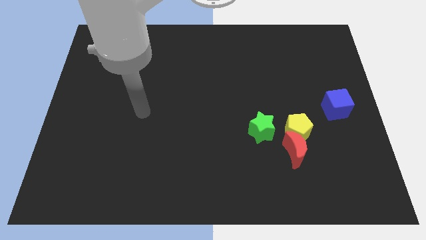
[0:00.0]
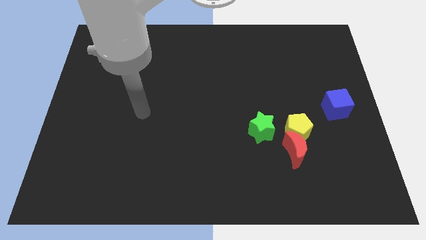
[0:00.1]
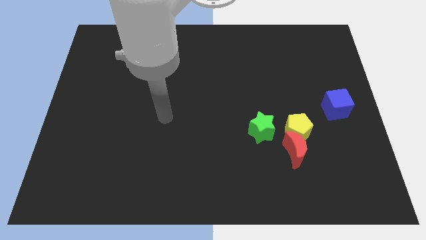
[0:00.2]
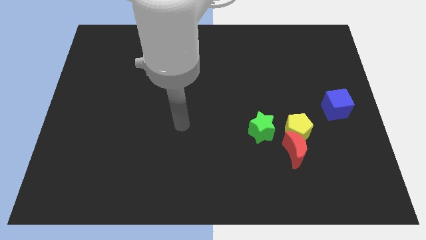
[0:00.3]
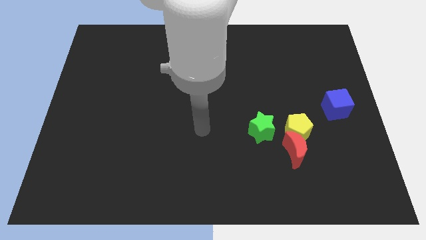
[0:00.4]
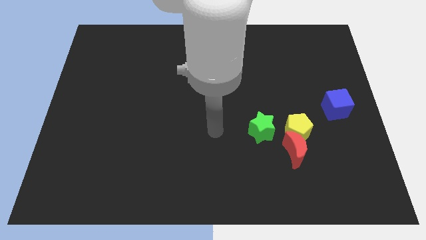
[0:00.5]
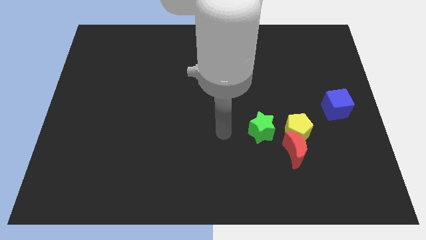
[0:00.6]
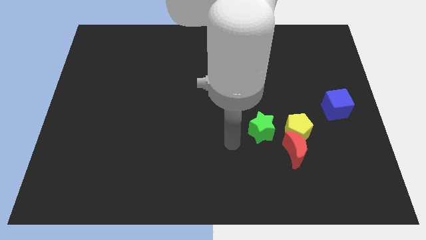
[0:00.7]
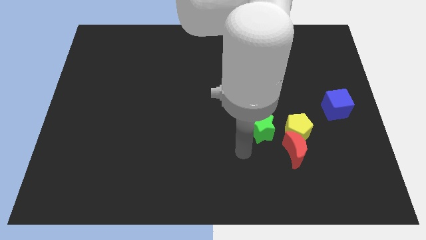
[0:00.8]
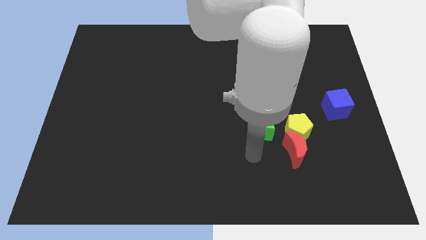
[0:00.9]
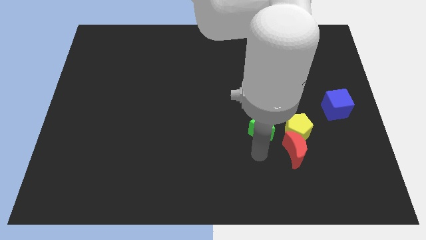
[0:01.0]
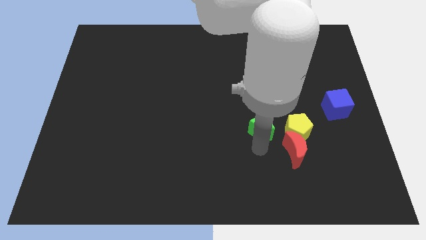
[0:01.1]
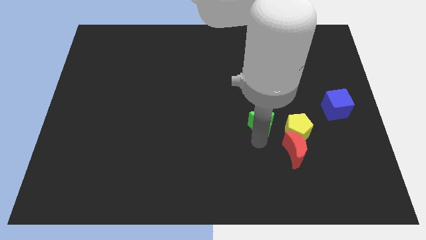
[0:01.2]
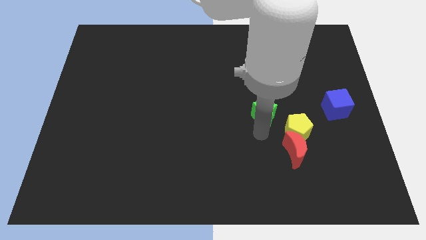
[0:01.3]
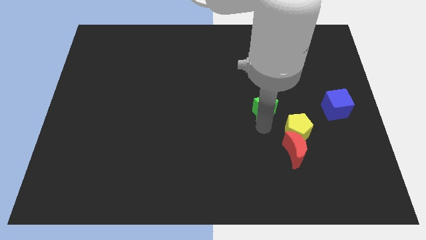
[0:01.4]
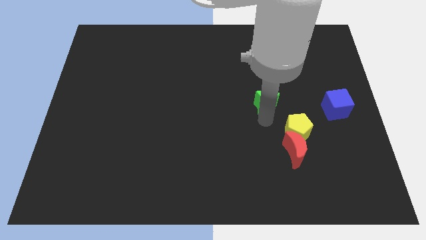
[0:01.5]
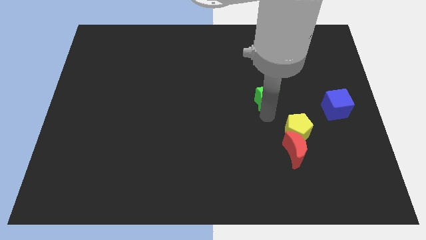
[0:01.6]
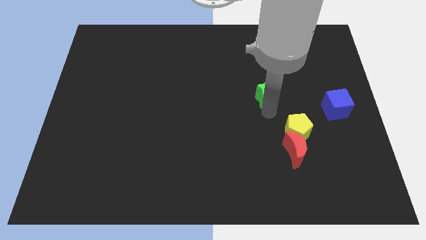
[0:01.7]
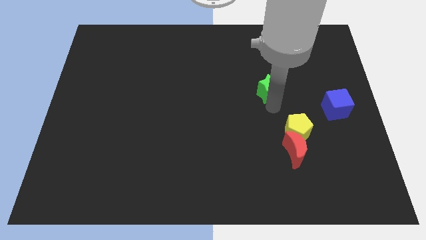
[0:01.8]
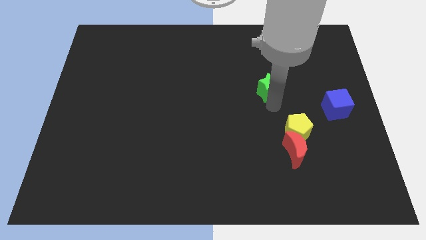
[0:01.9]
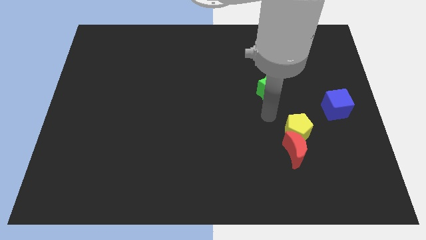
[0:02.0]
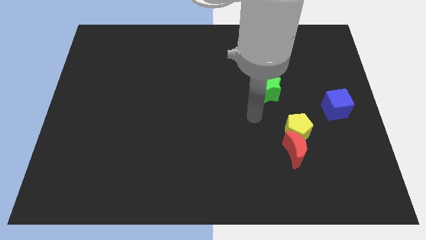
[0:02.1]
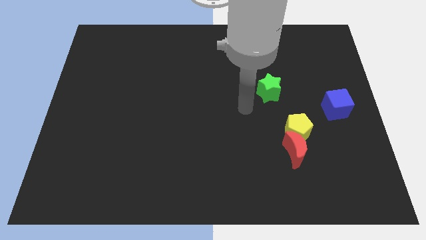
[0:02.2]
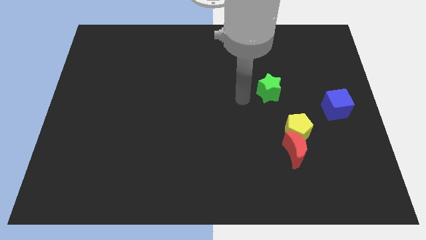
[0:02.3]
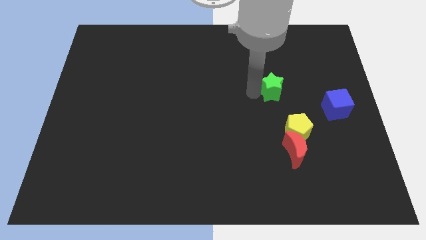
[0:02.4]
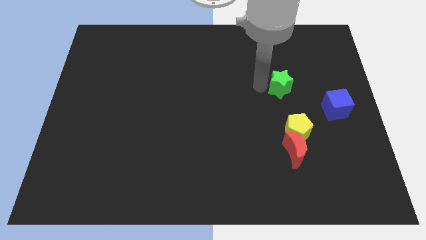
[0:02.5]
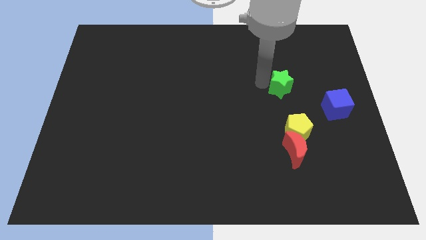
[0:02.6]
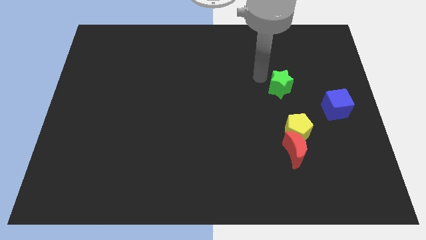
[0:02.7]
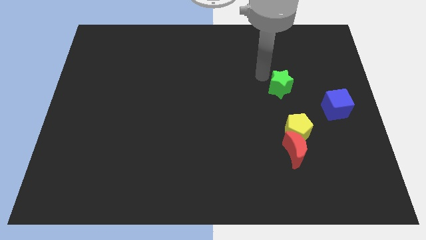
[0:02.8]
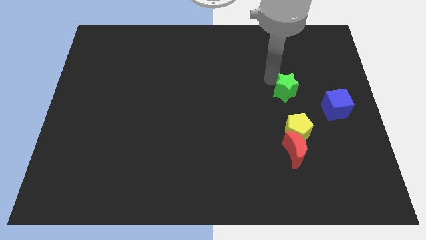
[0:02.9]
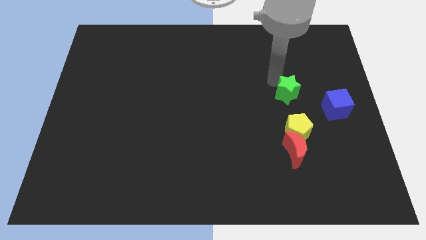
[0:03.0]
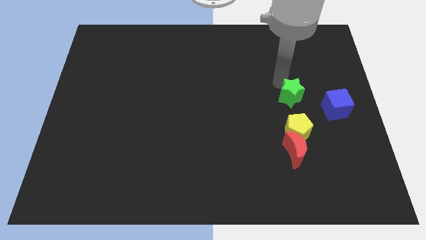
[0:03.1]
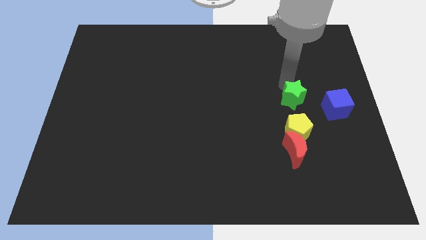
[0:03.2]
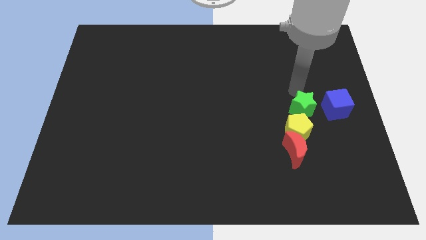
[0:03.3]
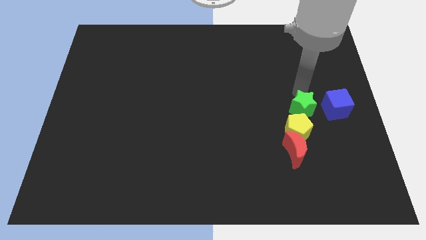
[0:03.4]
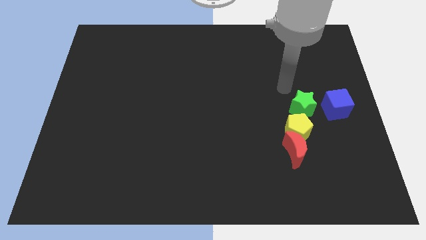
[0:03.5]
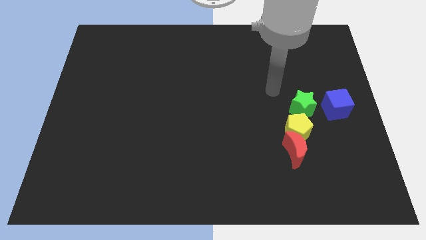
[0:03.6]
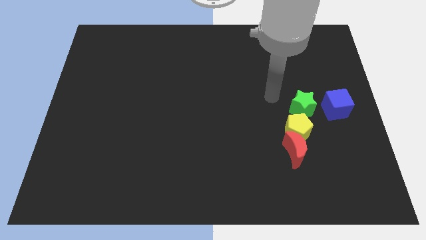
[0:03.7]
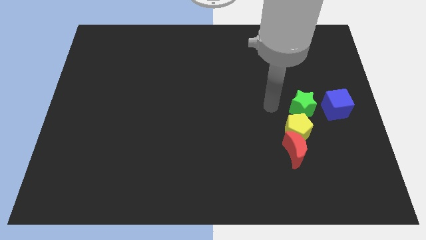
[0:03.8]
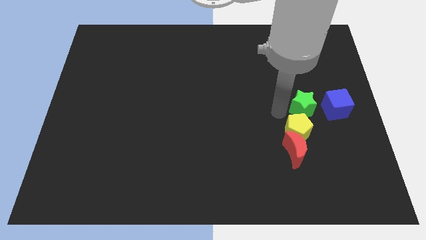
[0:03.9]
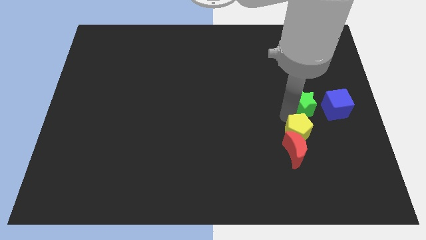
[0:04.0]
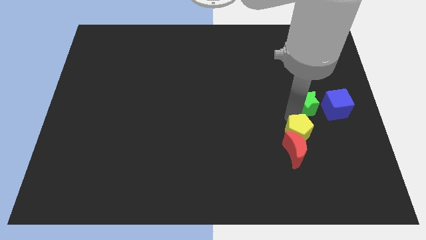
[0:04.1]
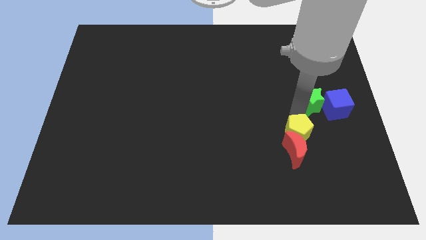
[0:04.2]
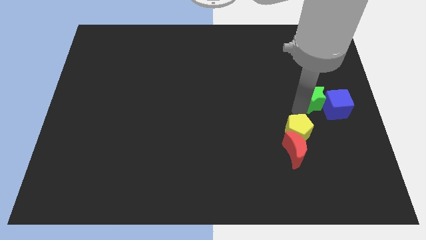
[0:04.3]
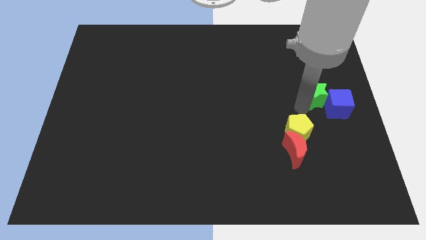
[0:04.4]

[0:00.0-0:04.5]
put the star towards the cube

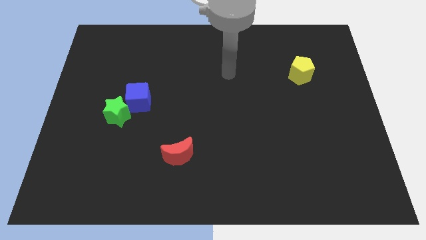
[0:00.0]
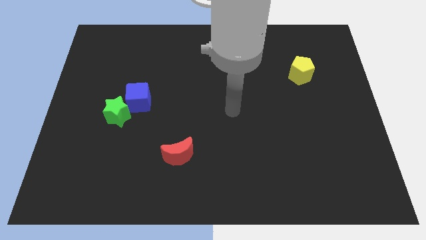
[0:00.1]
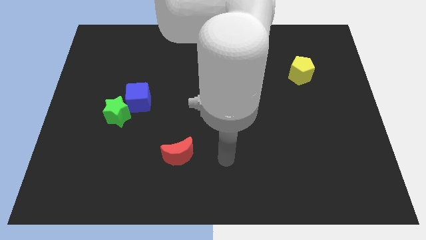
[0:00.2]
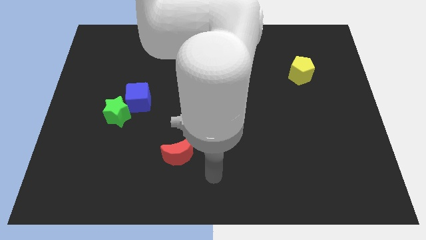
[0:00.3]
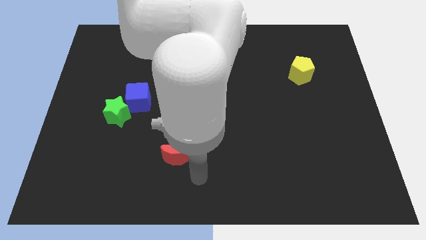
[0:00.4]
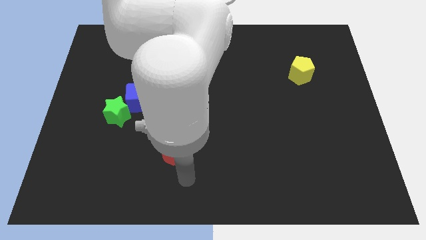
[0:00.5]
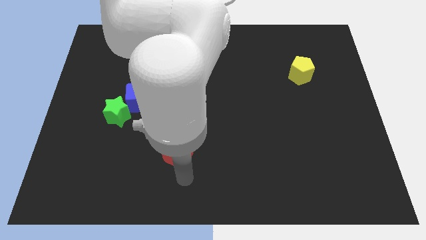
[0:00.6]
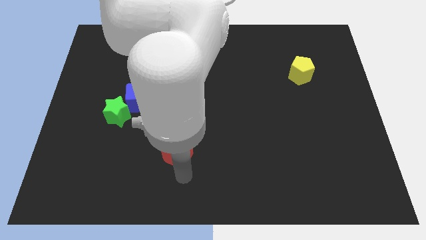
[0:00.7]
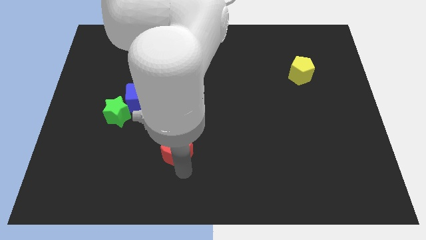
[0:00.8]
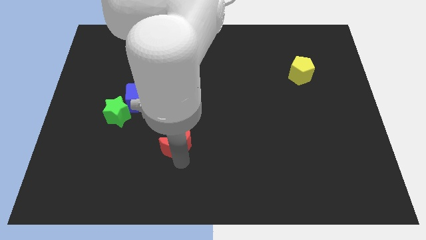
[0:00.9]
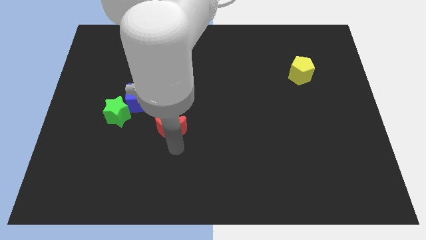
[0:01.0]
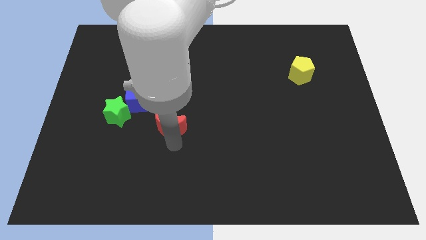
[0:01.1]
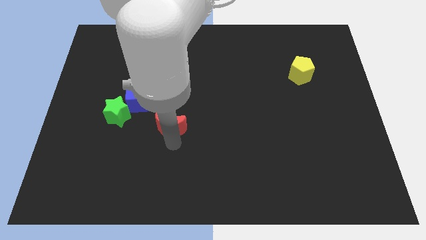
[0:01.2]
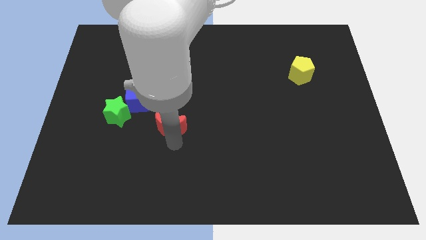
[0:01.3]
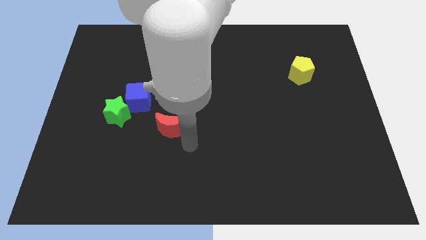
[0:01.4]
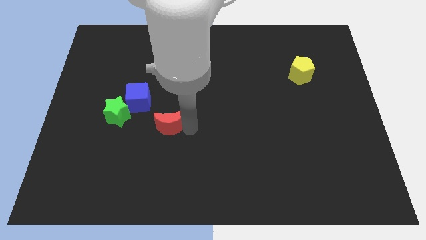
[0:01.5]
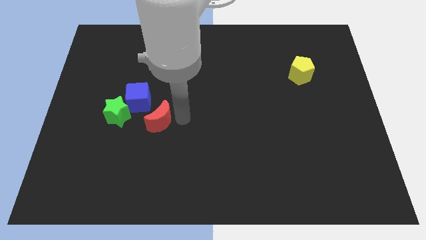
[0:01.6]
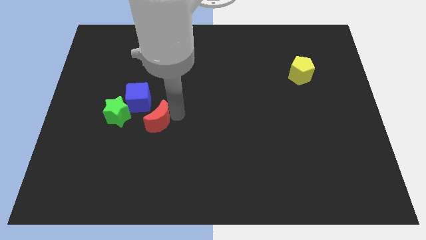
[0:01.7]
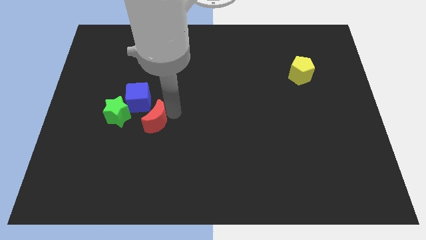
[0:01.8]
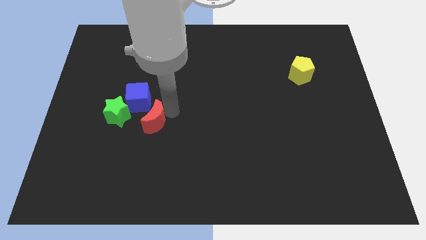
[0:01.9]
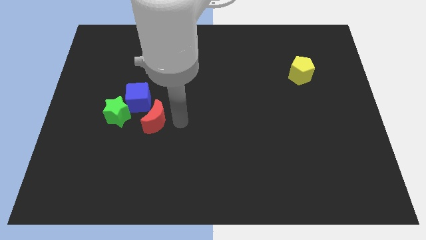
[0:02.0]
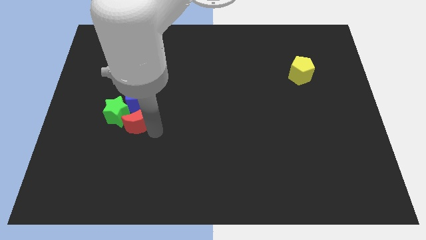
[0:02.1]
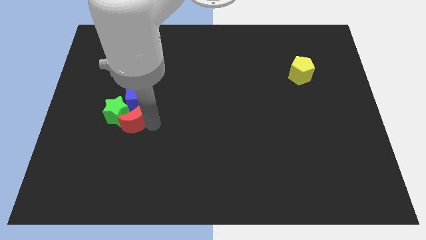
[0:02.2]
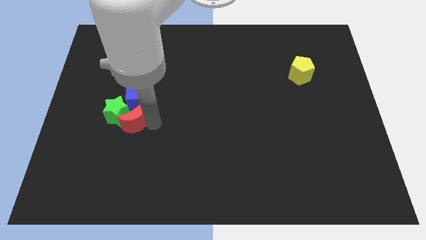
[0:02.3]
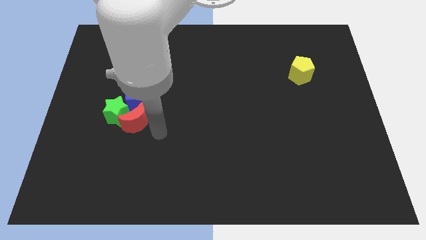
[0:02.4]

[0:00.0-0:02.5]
move the red moon to the blue block

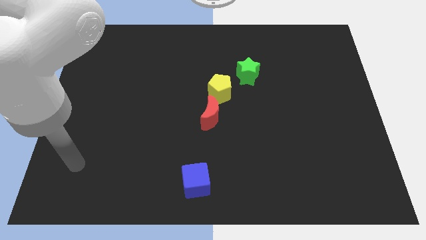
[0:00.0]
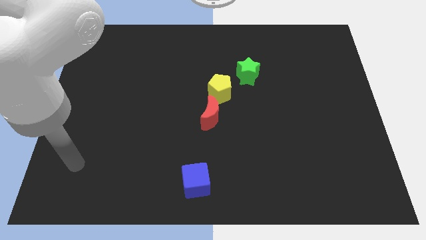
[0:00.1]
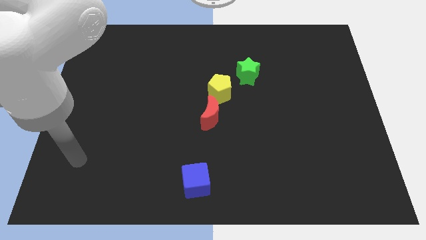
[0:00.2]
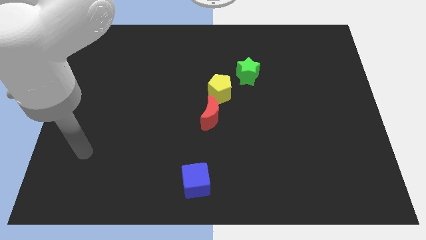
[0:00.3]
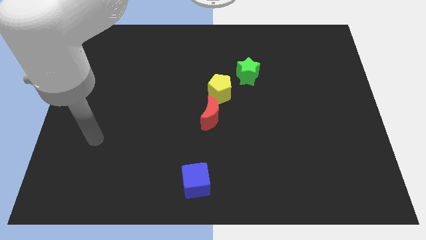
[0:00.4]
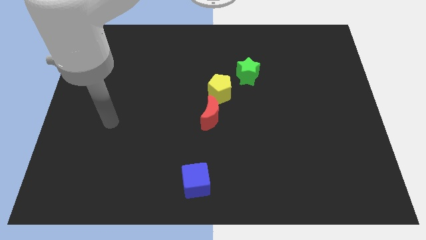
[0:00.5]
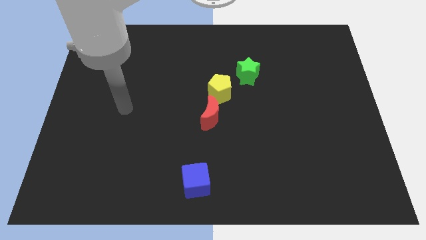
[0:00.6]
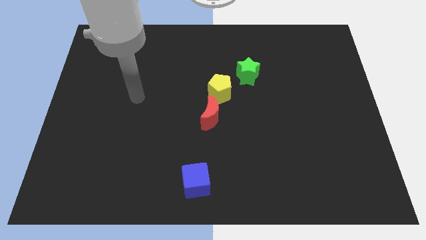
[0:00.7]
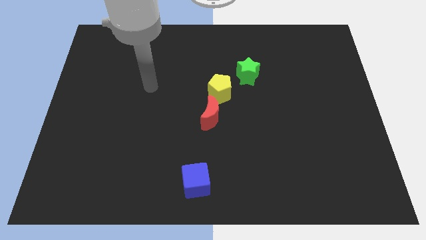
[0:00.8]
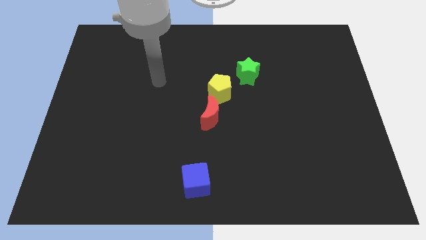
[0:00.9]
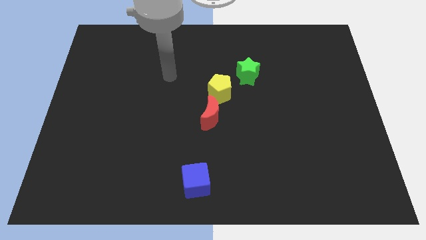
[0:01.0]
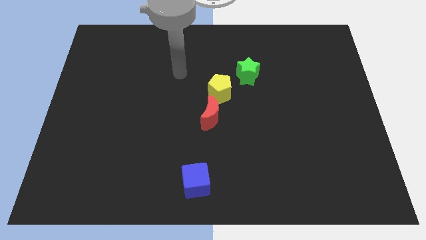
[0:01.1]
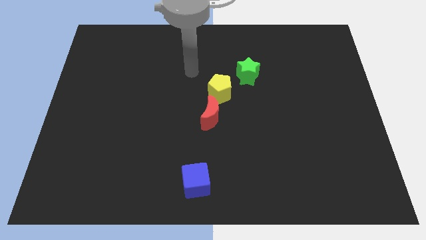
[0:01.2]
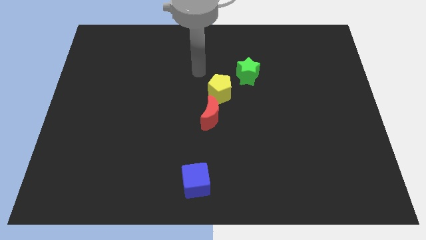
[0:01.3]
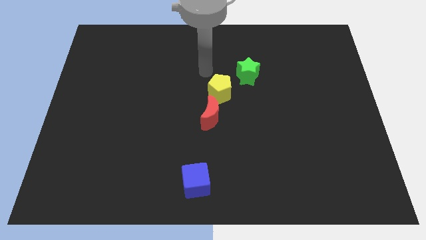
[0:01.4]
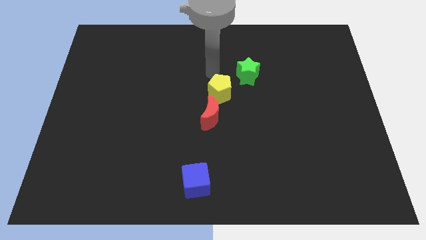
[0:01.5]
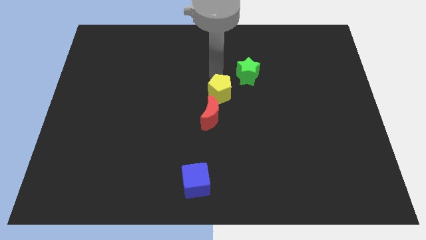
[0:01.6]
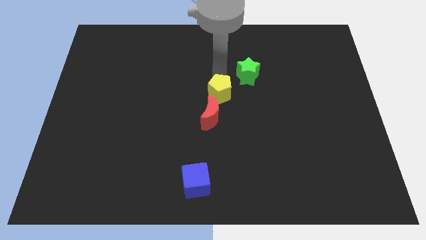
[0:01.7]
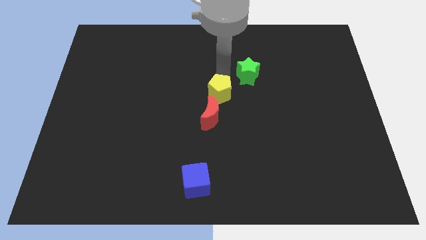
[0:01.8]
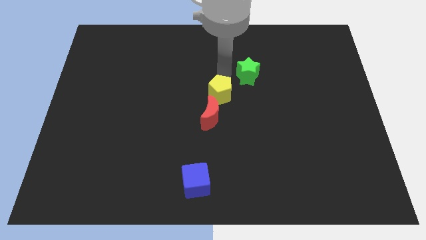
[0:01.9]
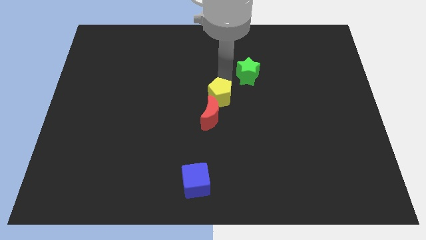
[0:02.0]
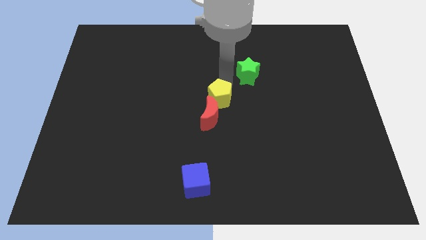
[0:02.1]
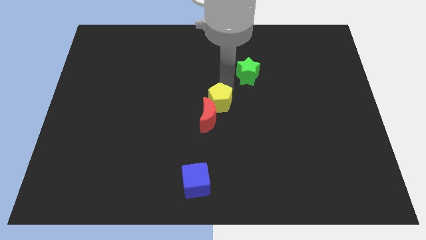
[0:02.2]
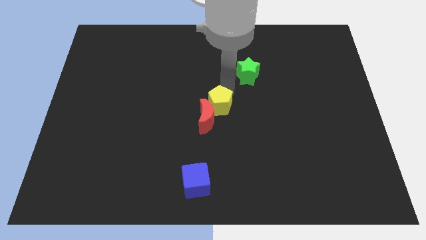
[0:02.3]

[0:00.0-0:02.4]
push the yellow pentagon close to the red moon
